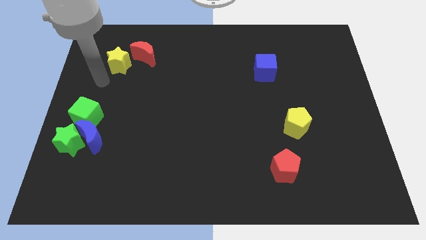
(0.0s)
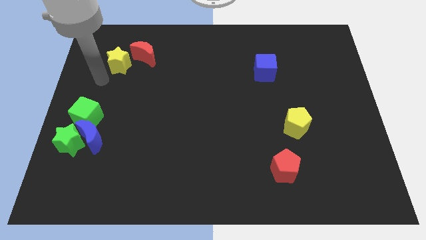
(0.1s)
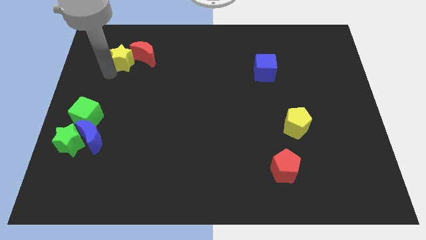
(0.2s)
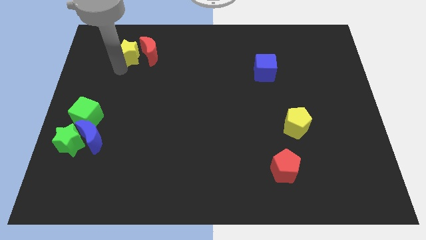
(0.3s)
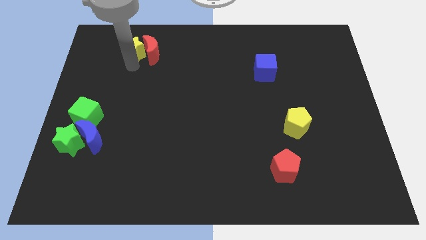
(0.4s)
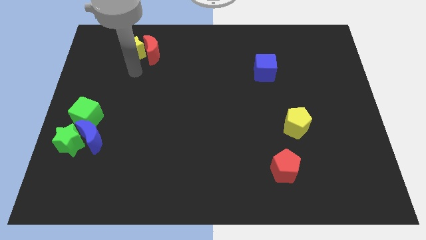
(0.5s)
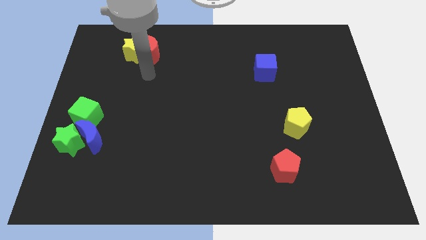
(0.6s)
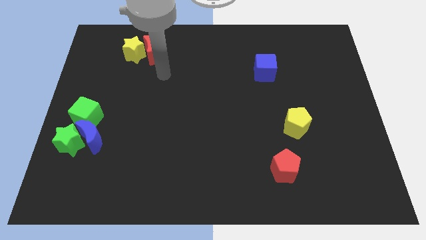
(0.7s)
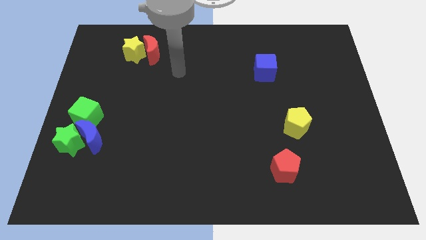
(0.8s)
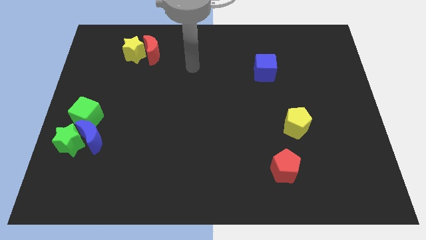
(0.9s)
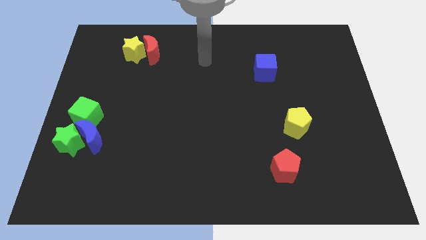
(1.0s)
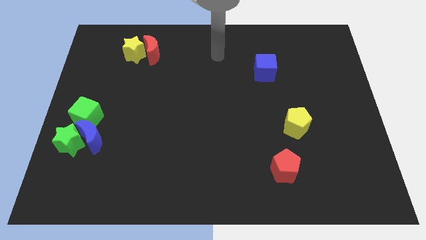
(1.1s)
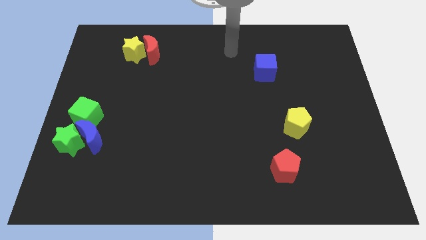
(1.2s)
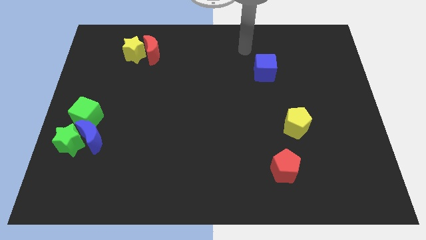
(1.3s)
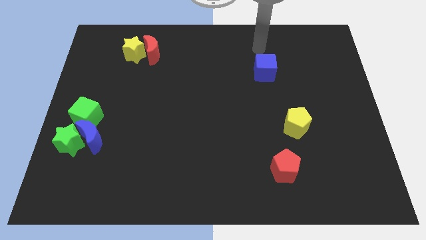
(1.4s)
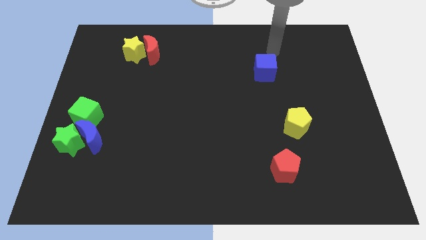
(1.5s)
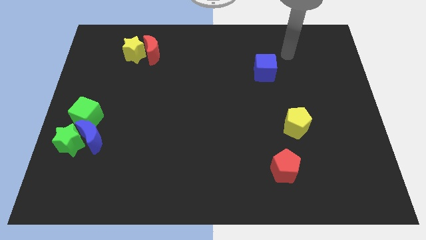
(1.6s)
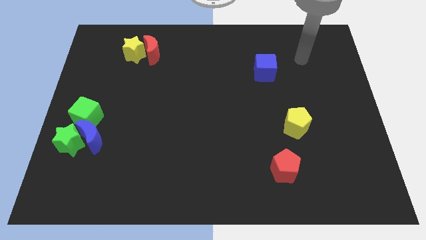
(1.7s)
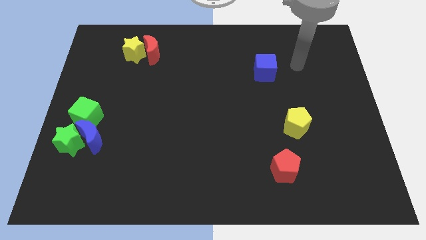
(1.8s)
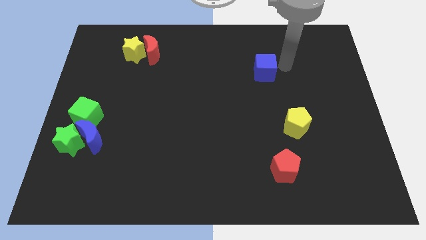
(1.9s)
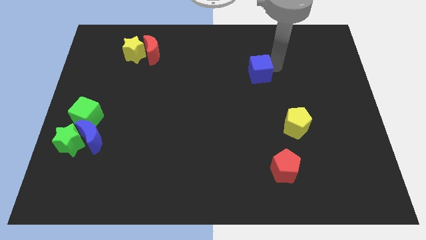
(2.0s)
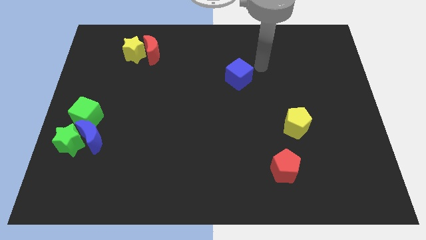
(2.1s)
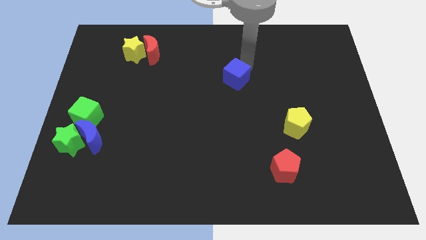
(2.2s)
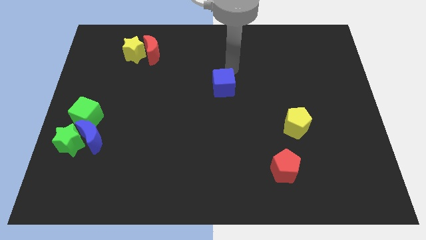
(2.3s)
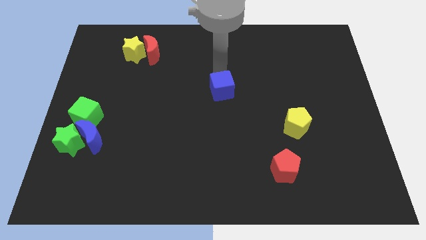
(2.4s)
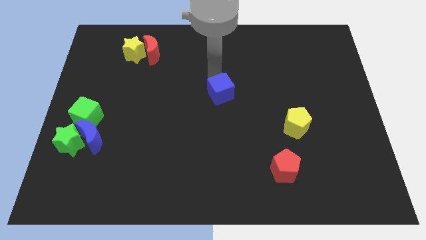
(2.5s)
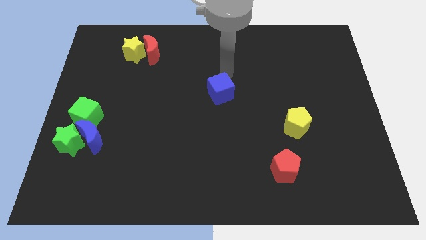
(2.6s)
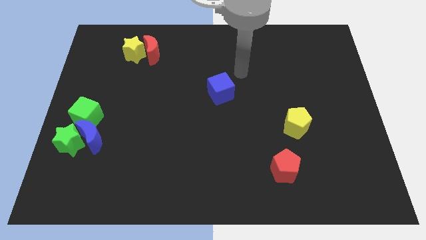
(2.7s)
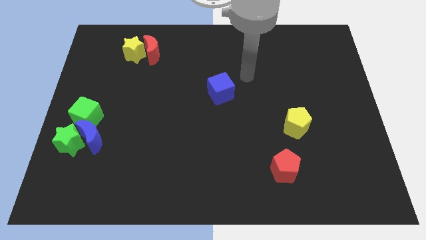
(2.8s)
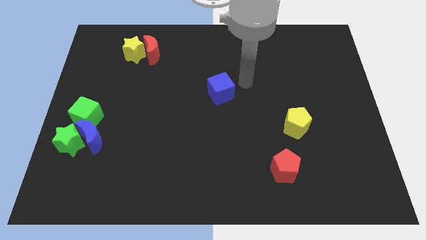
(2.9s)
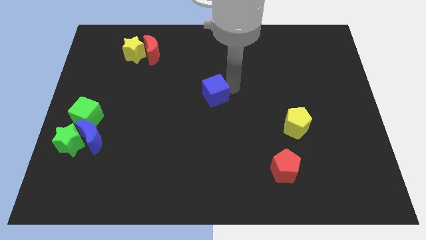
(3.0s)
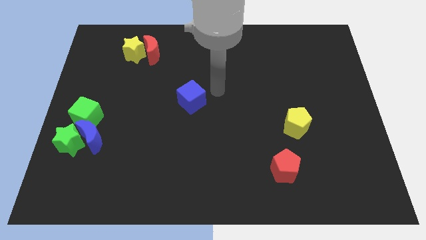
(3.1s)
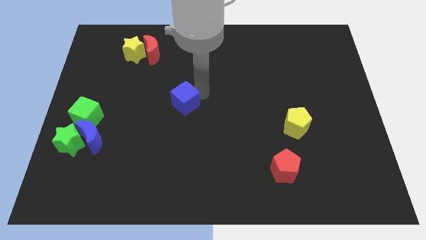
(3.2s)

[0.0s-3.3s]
move your arm towards the blue cube

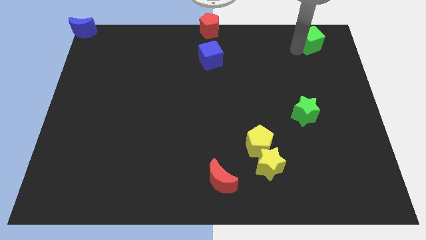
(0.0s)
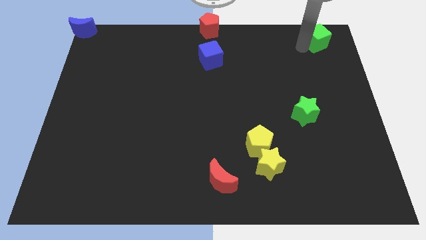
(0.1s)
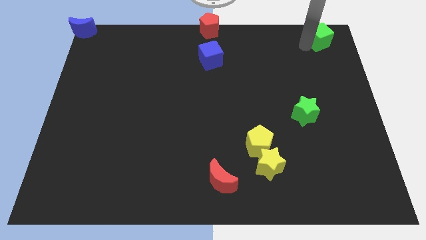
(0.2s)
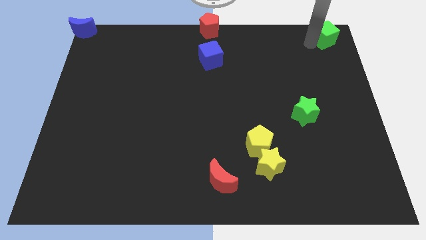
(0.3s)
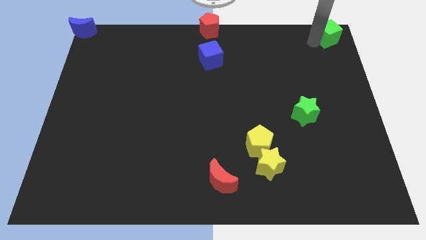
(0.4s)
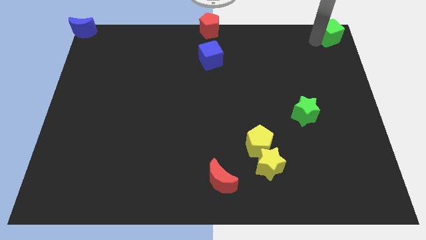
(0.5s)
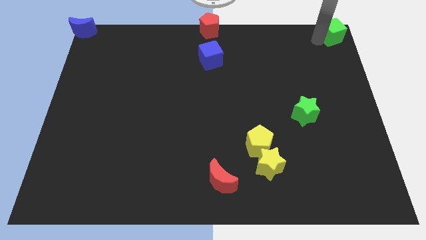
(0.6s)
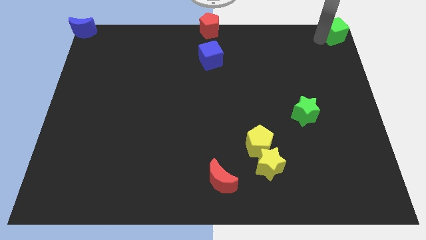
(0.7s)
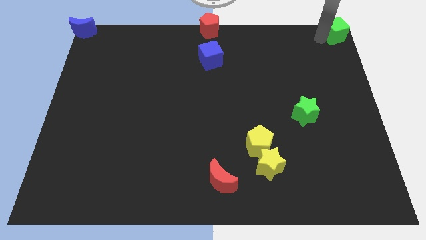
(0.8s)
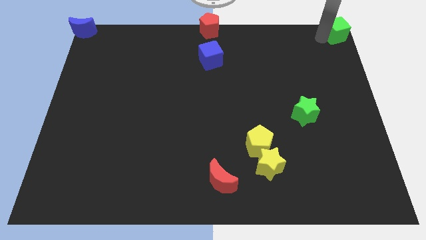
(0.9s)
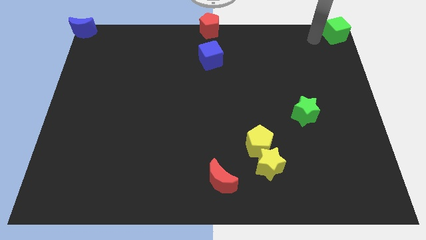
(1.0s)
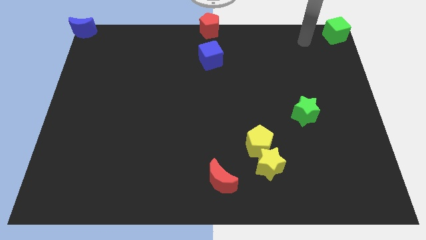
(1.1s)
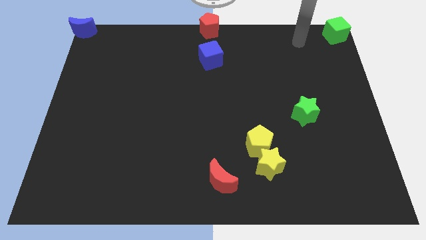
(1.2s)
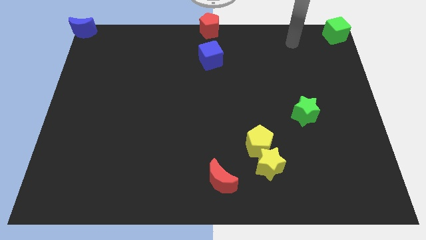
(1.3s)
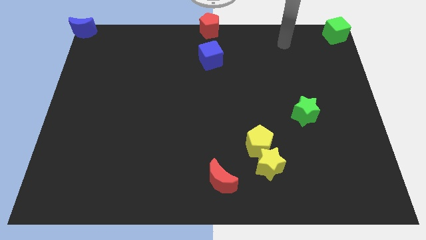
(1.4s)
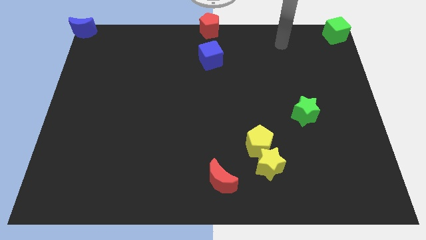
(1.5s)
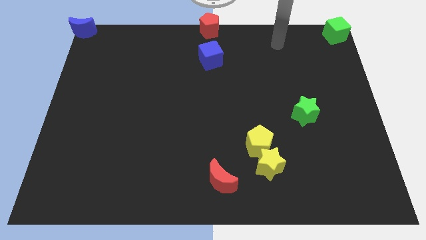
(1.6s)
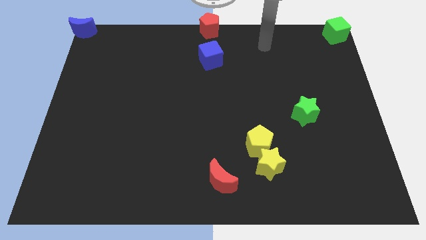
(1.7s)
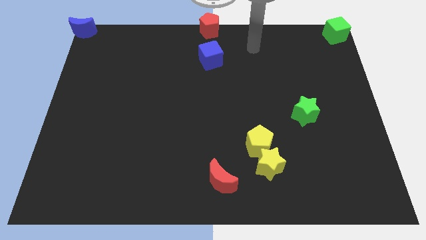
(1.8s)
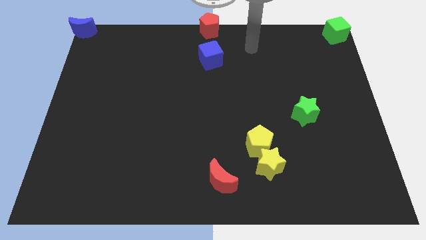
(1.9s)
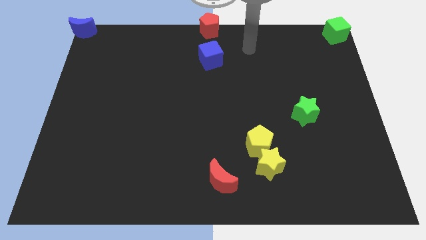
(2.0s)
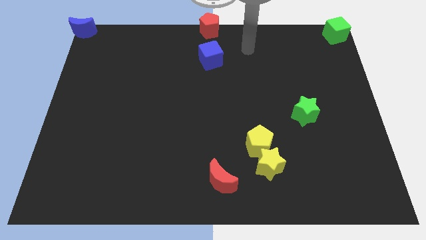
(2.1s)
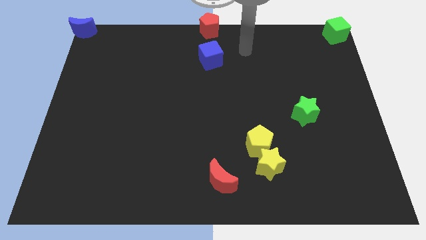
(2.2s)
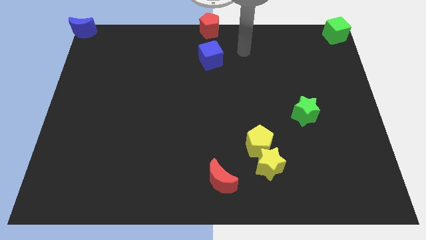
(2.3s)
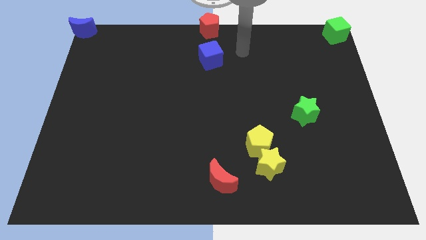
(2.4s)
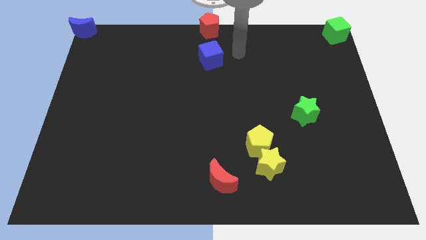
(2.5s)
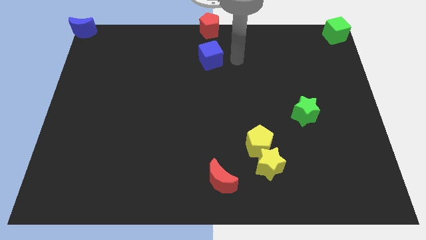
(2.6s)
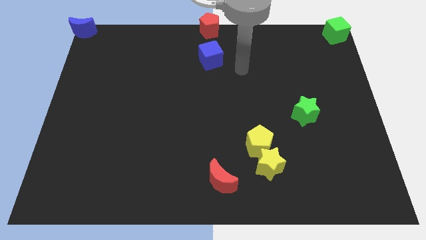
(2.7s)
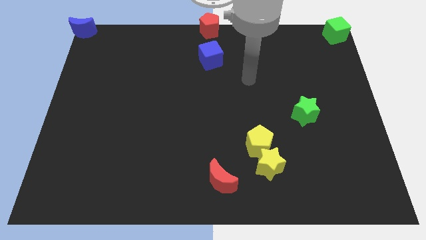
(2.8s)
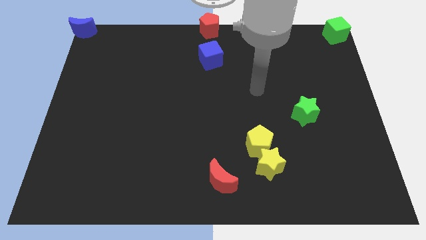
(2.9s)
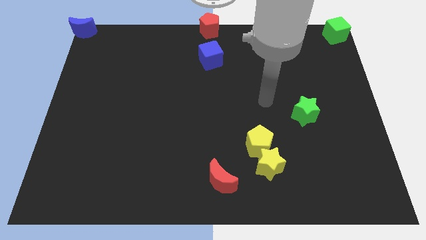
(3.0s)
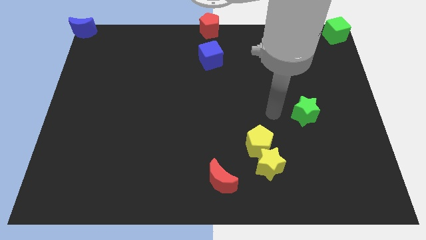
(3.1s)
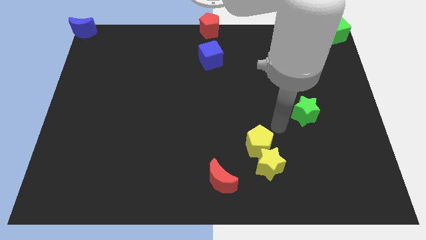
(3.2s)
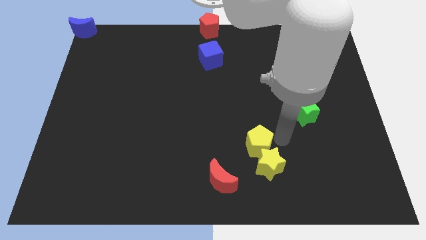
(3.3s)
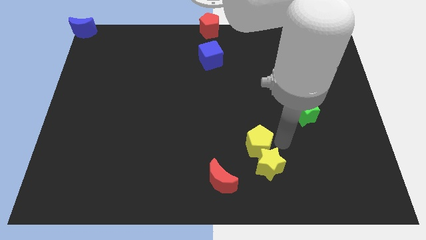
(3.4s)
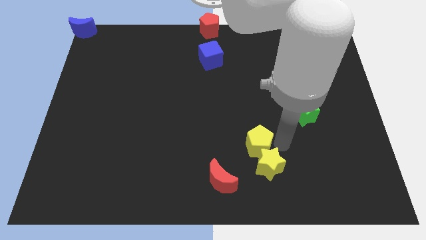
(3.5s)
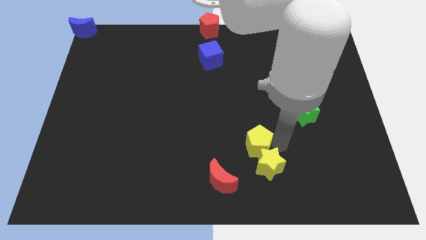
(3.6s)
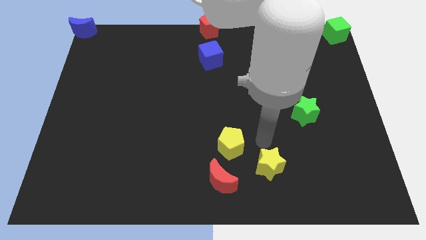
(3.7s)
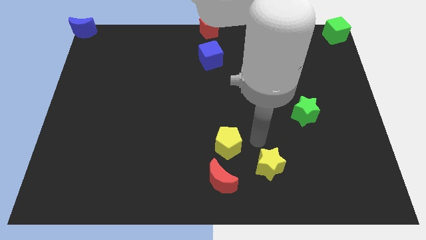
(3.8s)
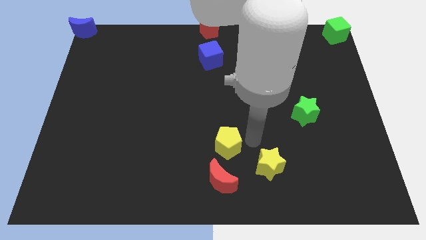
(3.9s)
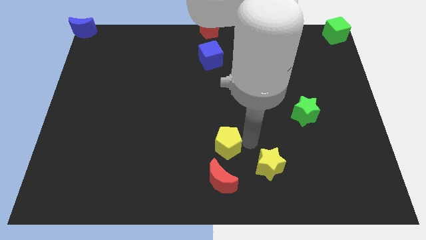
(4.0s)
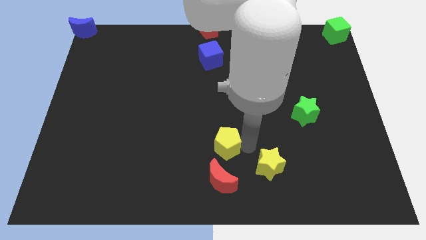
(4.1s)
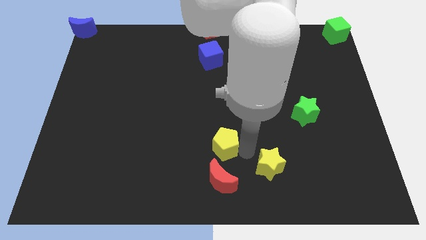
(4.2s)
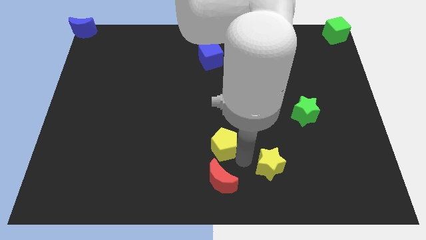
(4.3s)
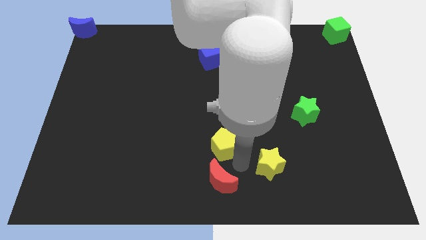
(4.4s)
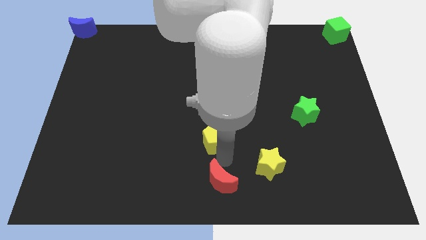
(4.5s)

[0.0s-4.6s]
place the yellow pentagon to the top of the red crescent

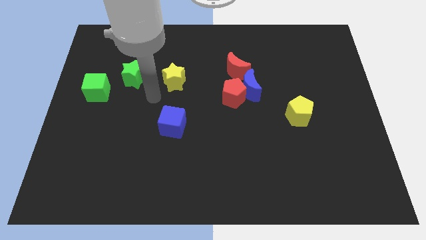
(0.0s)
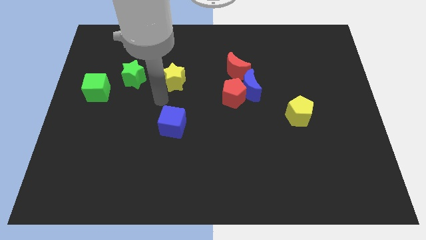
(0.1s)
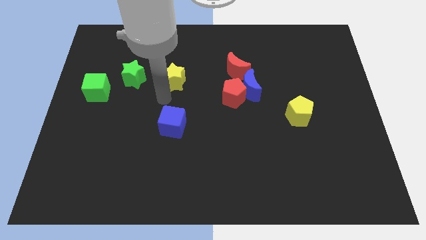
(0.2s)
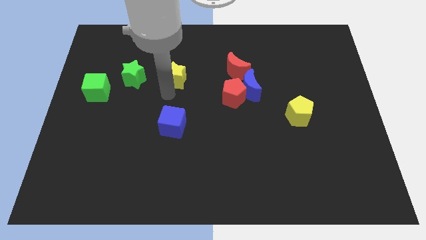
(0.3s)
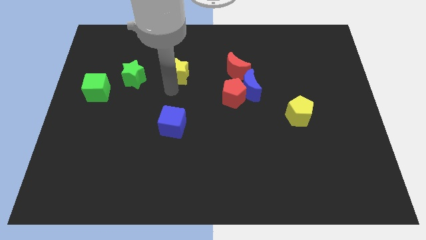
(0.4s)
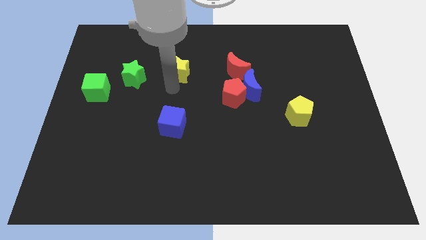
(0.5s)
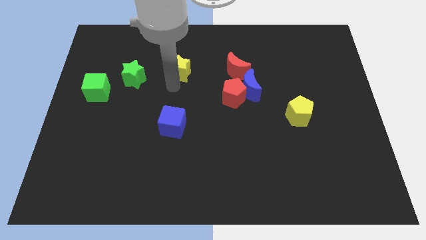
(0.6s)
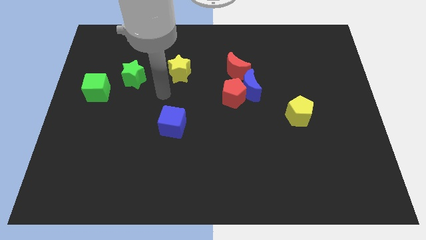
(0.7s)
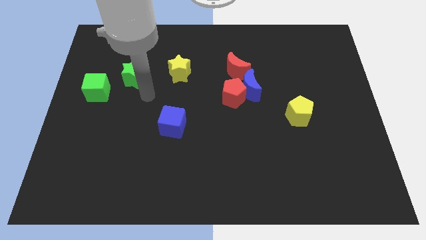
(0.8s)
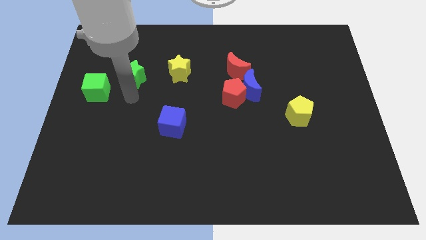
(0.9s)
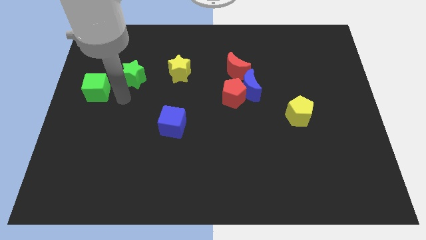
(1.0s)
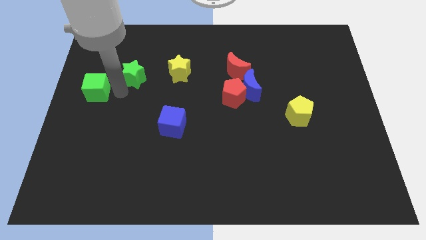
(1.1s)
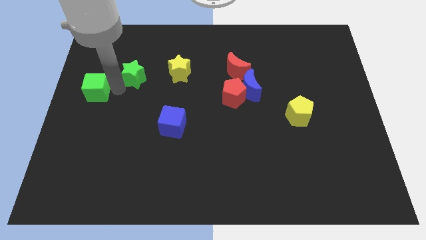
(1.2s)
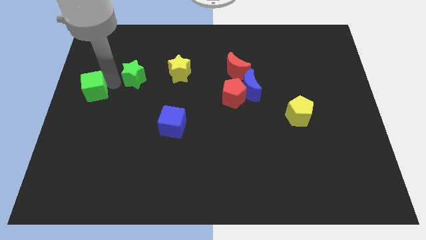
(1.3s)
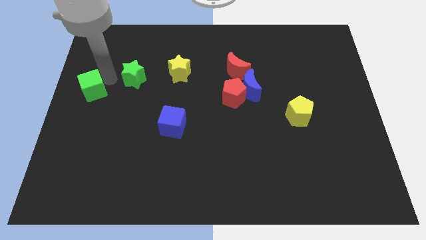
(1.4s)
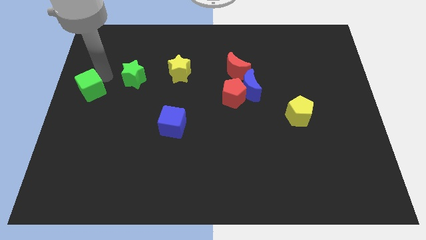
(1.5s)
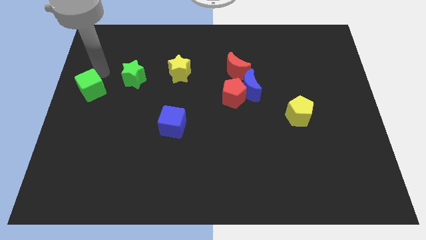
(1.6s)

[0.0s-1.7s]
place the yellow star in between the green star and red moon
